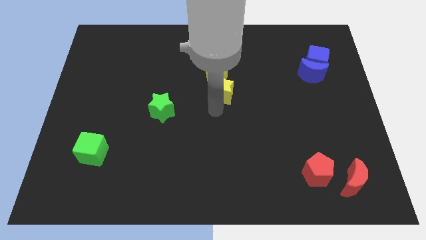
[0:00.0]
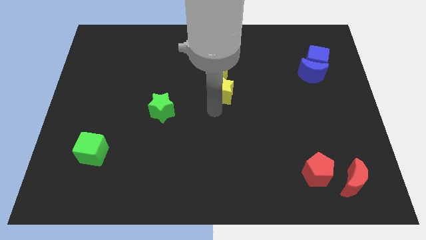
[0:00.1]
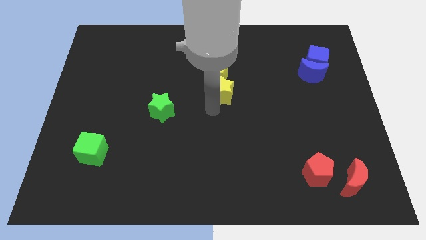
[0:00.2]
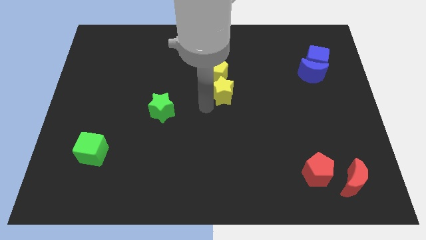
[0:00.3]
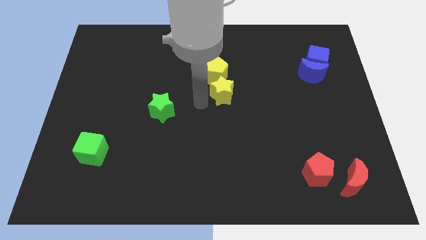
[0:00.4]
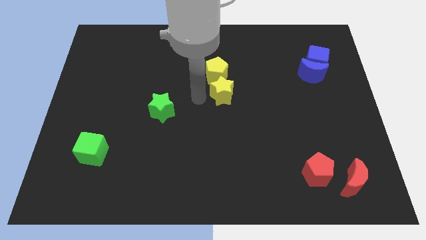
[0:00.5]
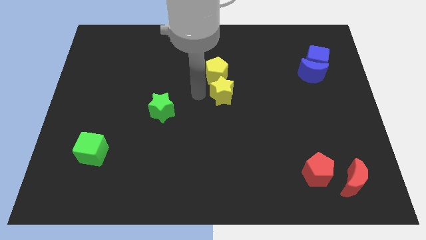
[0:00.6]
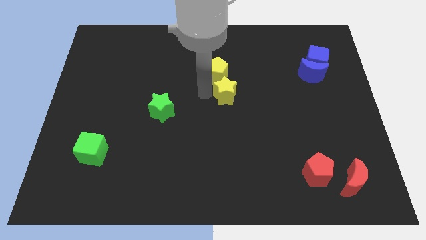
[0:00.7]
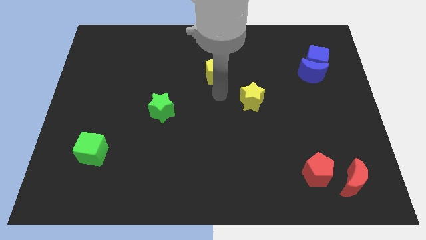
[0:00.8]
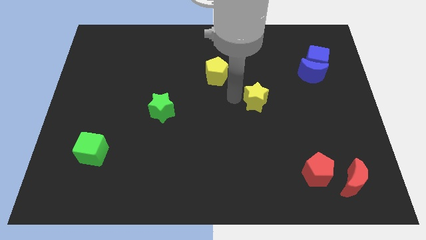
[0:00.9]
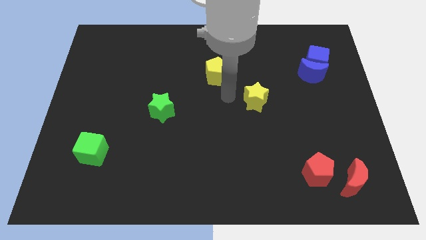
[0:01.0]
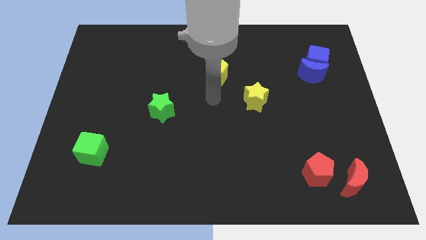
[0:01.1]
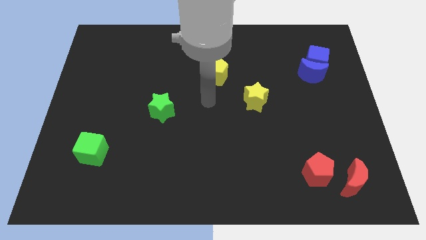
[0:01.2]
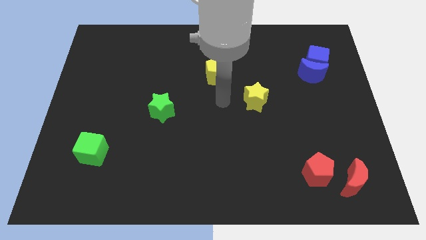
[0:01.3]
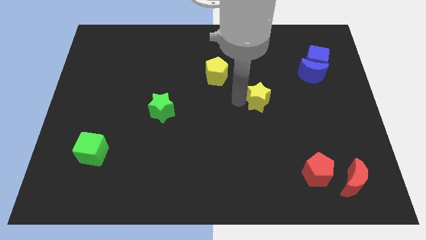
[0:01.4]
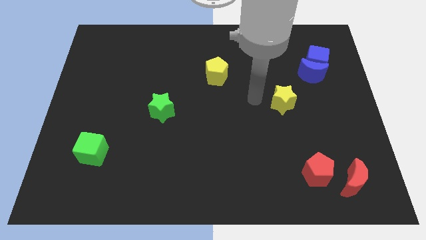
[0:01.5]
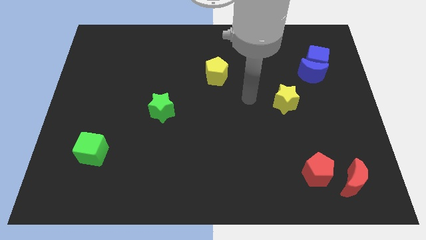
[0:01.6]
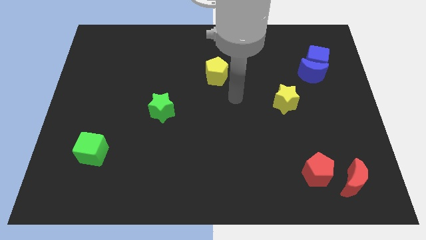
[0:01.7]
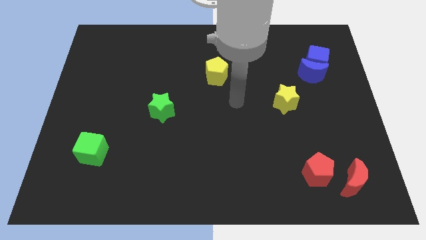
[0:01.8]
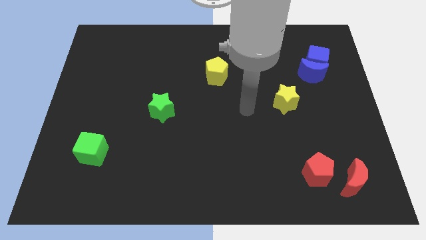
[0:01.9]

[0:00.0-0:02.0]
separate the yellow star from the yellow pentagon

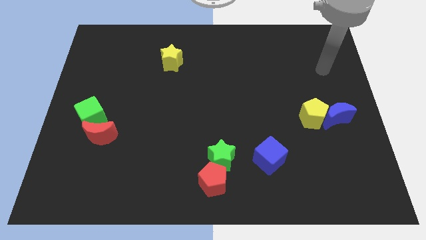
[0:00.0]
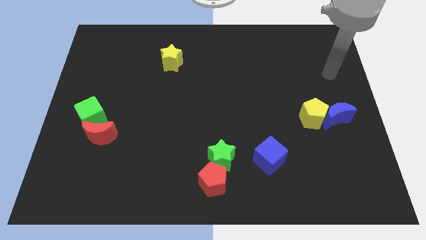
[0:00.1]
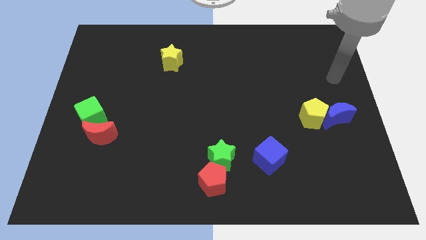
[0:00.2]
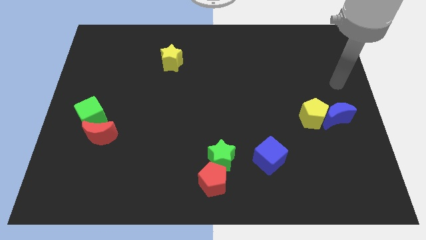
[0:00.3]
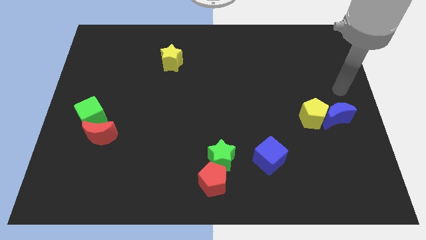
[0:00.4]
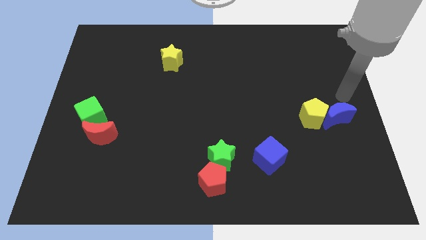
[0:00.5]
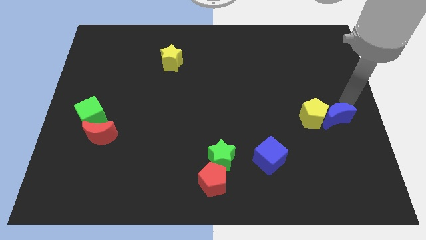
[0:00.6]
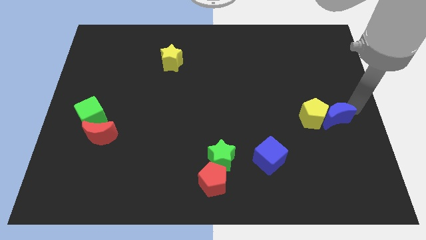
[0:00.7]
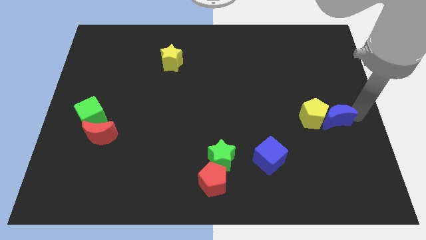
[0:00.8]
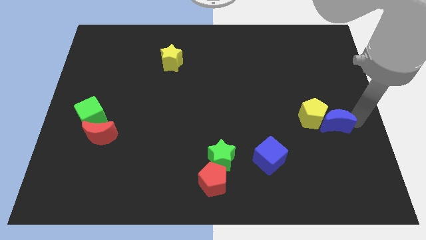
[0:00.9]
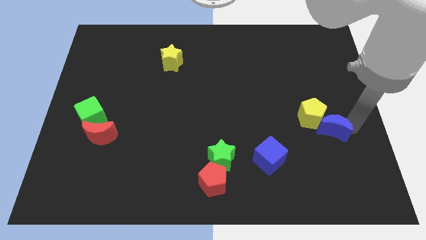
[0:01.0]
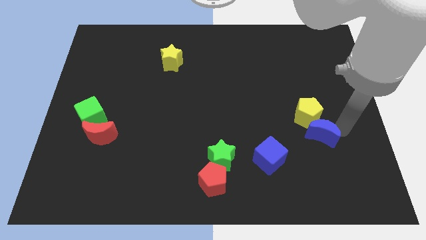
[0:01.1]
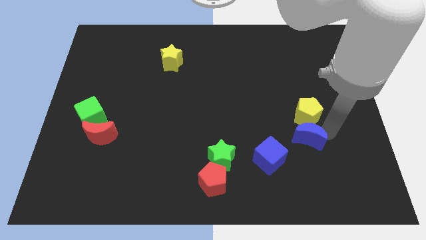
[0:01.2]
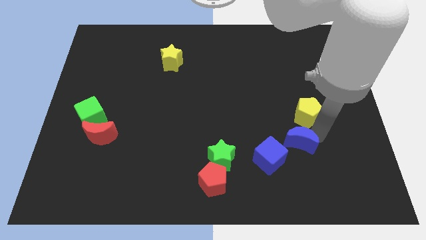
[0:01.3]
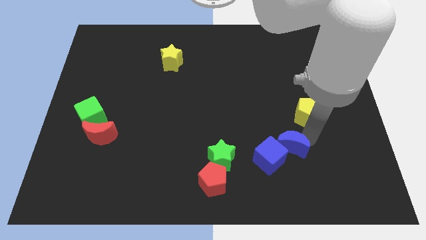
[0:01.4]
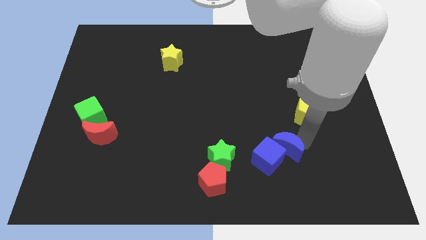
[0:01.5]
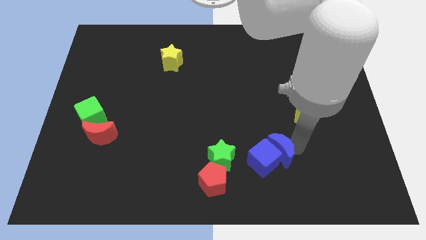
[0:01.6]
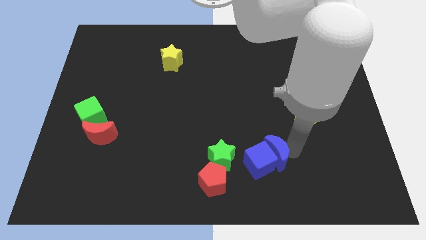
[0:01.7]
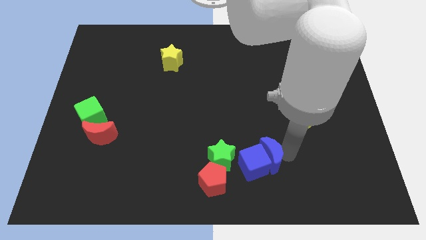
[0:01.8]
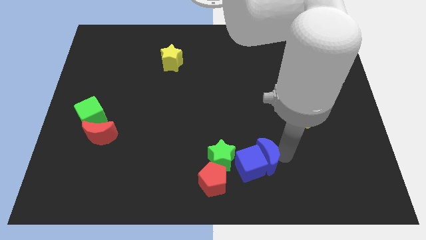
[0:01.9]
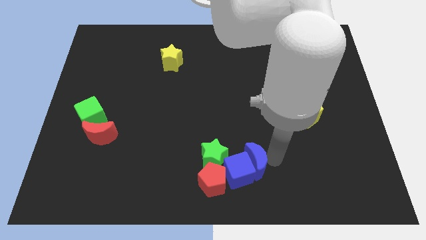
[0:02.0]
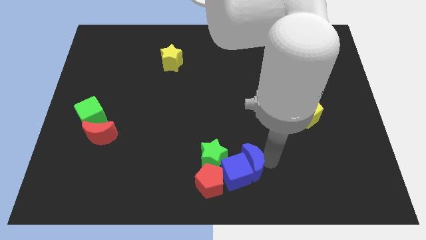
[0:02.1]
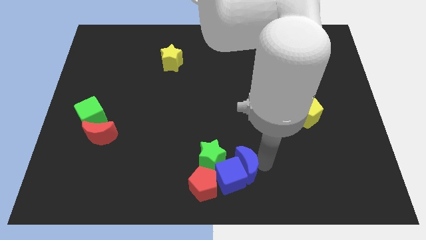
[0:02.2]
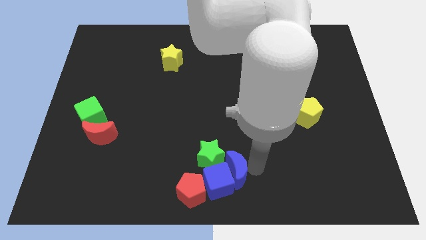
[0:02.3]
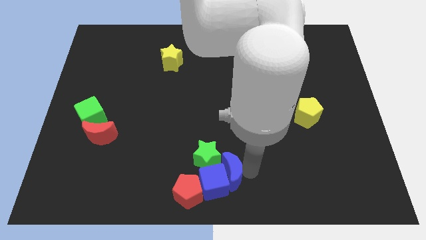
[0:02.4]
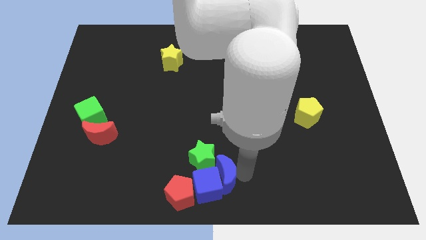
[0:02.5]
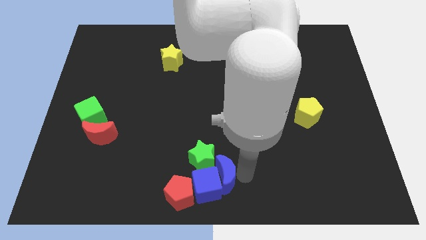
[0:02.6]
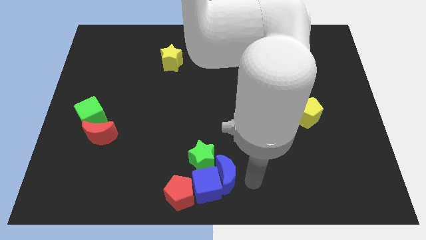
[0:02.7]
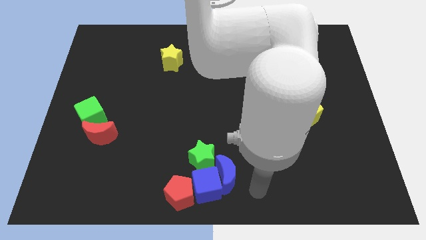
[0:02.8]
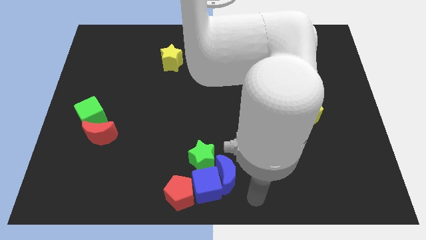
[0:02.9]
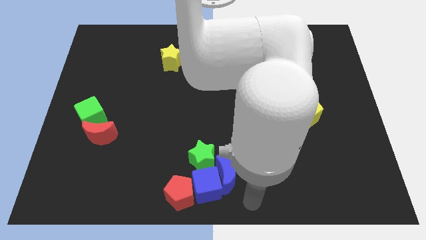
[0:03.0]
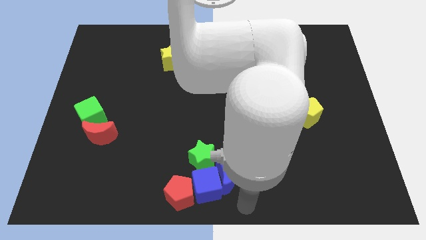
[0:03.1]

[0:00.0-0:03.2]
push the blue crescent along with blue cube to the bottom of the green star

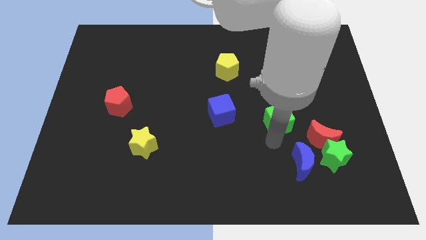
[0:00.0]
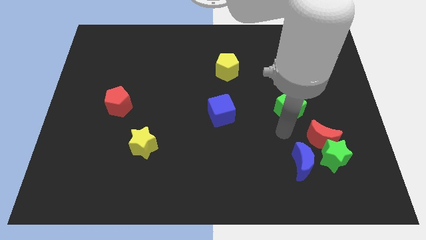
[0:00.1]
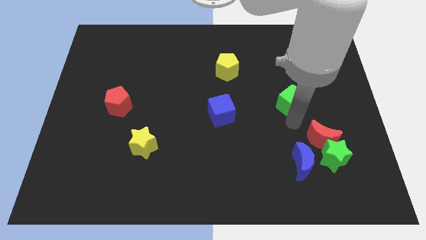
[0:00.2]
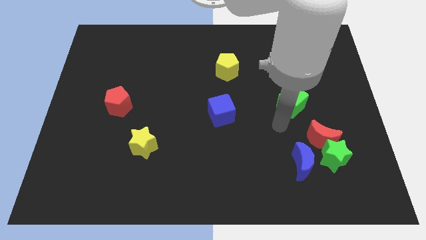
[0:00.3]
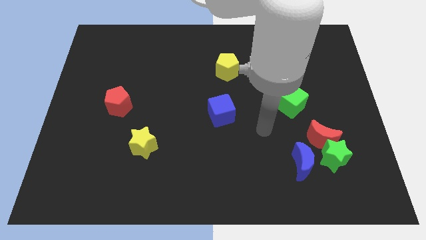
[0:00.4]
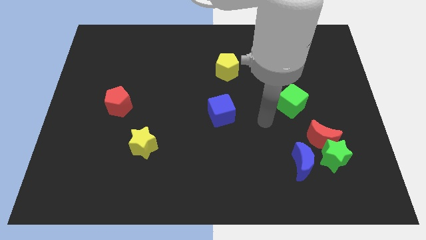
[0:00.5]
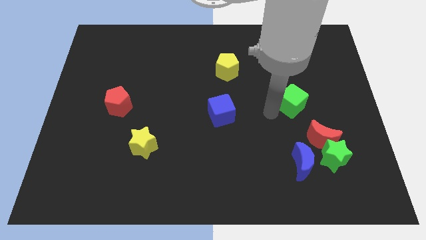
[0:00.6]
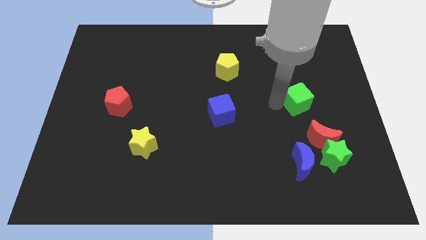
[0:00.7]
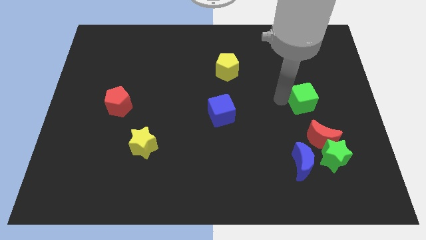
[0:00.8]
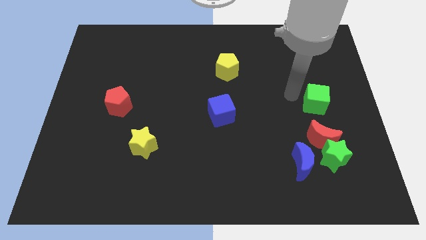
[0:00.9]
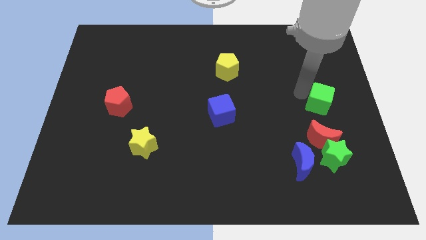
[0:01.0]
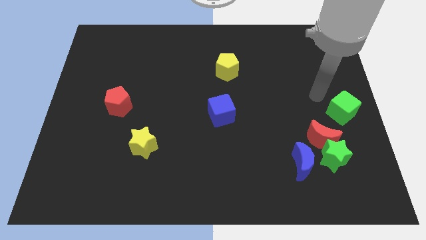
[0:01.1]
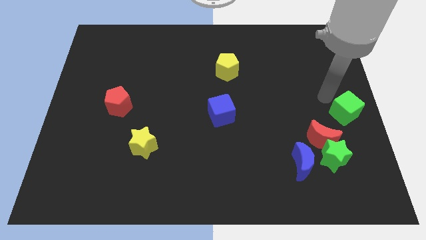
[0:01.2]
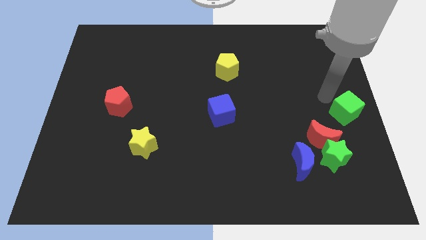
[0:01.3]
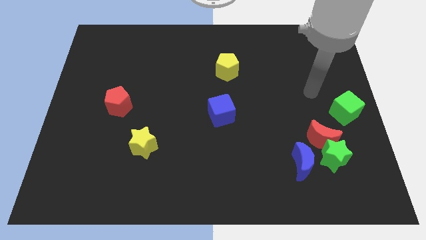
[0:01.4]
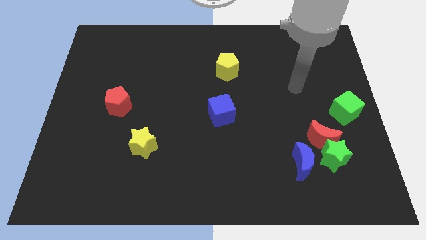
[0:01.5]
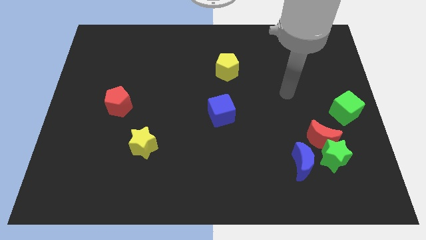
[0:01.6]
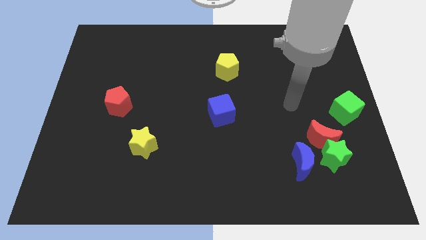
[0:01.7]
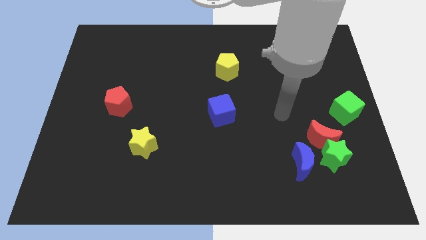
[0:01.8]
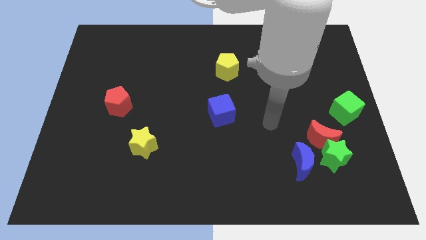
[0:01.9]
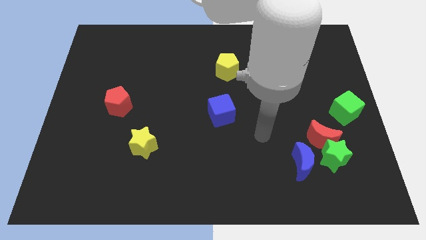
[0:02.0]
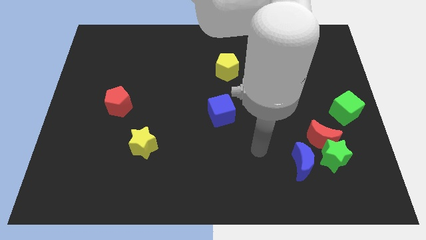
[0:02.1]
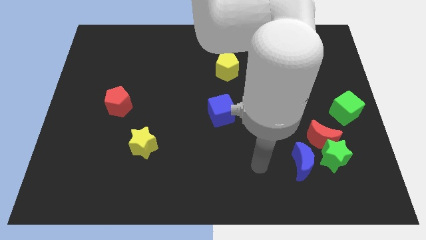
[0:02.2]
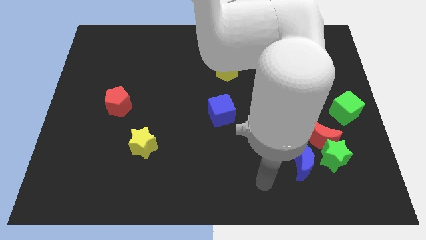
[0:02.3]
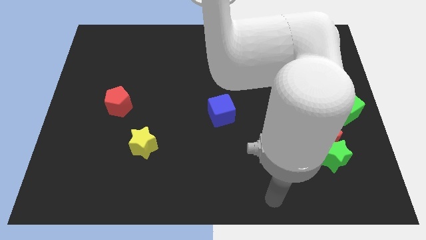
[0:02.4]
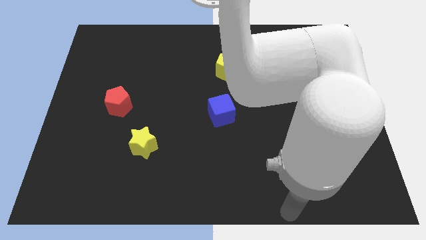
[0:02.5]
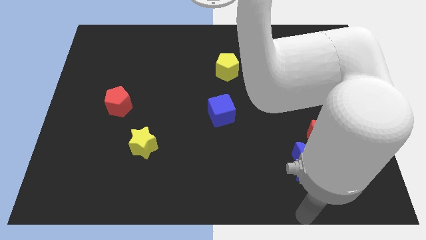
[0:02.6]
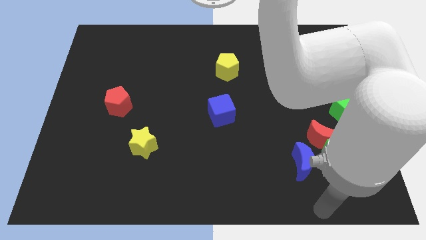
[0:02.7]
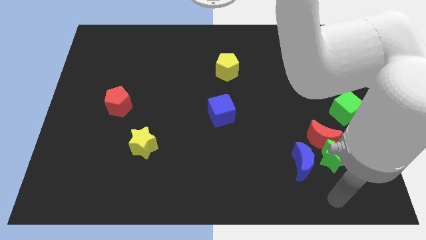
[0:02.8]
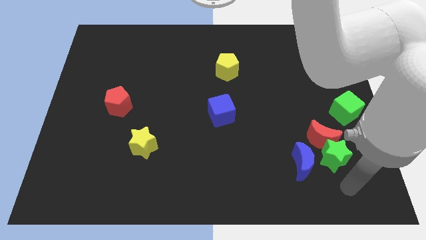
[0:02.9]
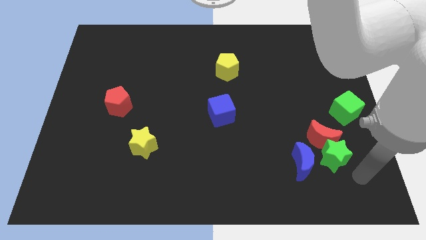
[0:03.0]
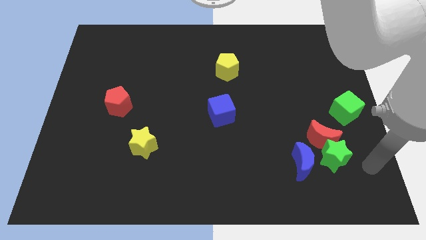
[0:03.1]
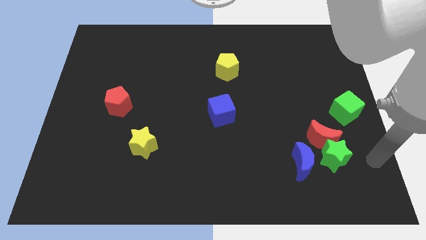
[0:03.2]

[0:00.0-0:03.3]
point your arm below green star

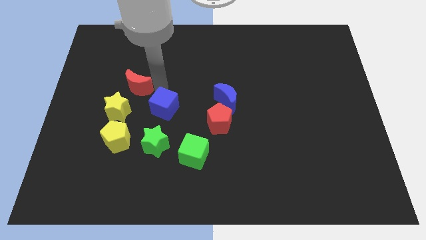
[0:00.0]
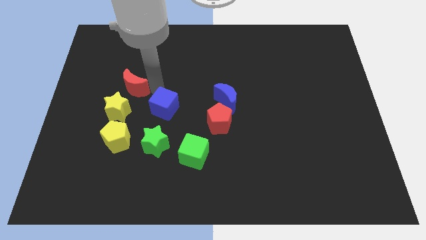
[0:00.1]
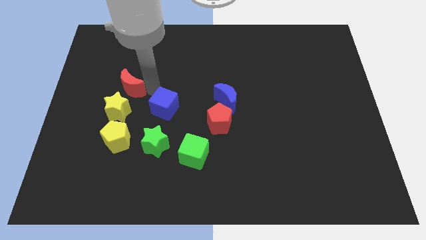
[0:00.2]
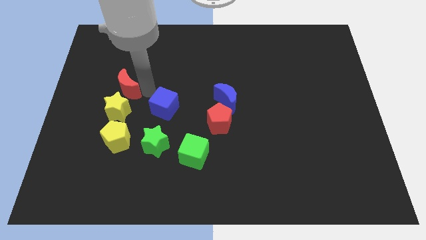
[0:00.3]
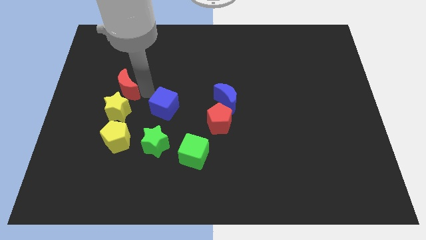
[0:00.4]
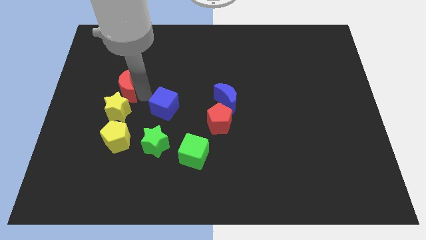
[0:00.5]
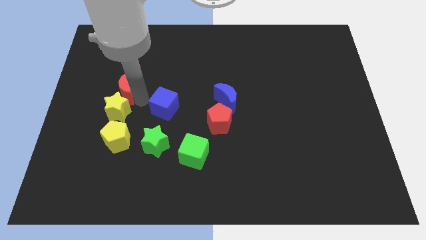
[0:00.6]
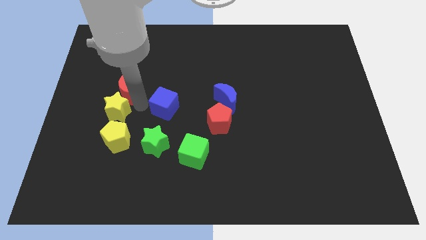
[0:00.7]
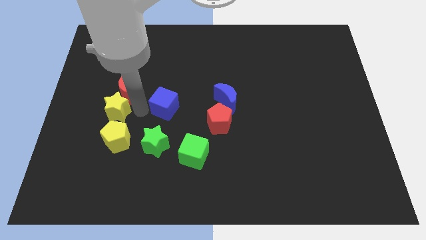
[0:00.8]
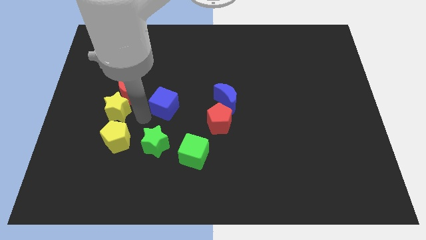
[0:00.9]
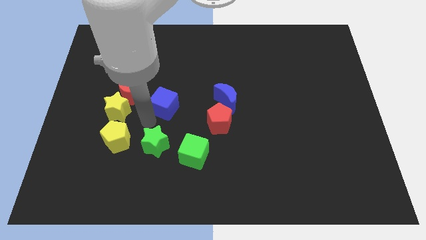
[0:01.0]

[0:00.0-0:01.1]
slightly move the red crescent towards the yellow pentagon
